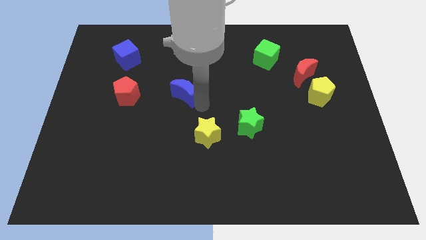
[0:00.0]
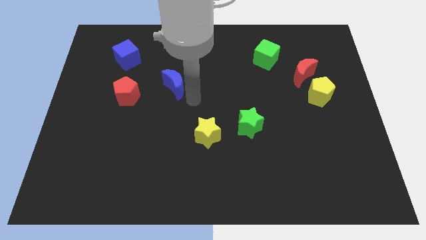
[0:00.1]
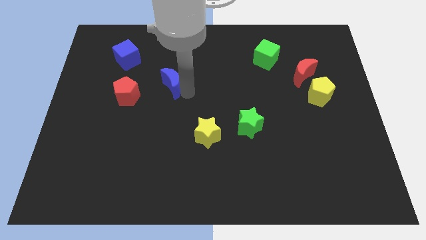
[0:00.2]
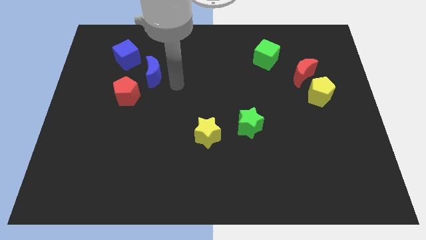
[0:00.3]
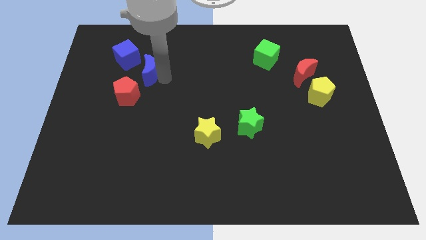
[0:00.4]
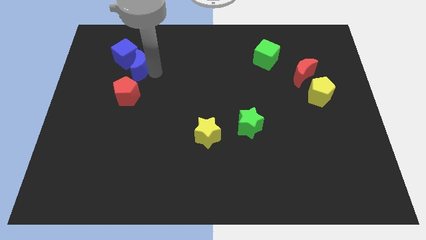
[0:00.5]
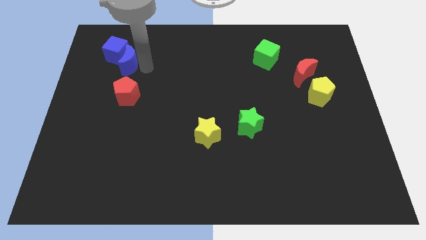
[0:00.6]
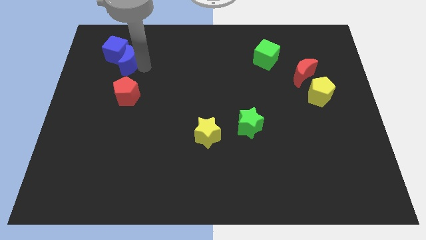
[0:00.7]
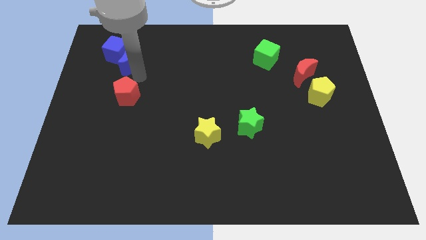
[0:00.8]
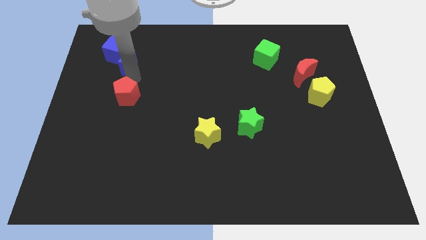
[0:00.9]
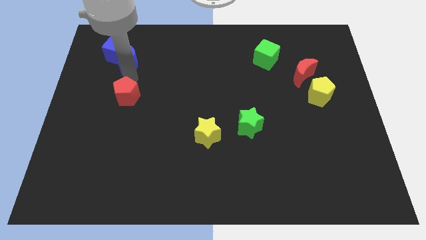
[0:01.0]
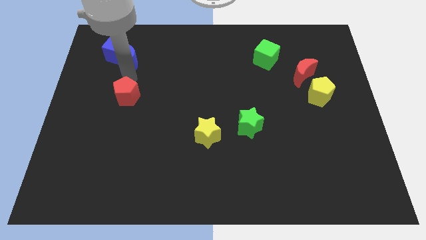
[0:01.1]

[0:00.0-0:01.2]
push the blue crescent into the blue cube

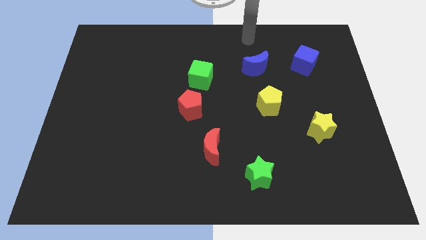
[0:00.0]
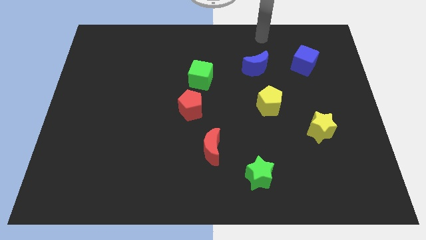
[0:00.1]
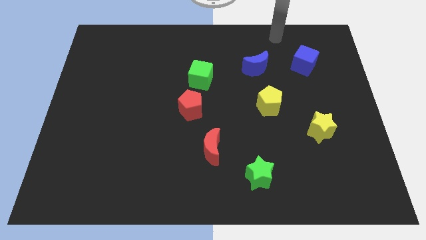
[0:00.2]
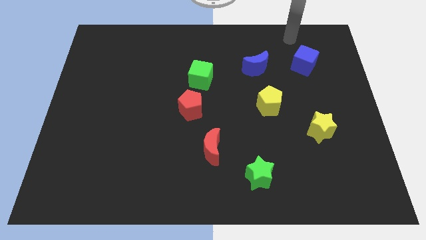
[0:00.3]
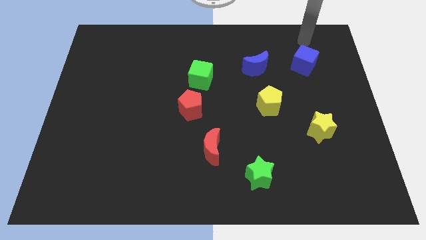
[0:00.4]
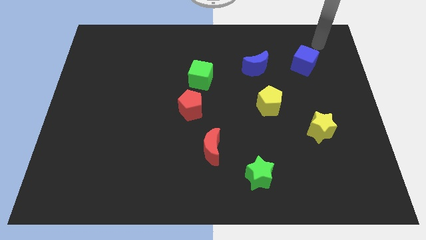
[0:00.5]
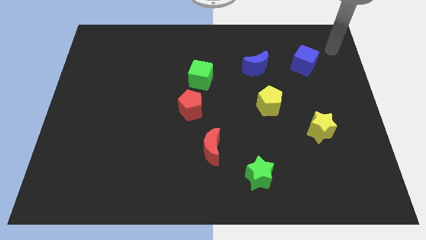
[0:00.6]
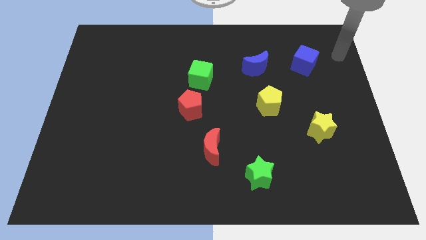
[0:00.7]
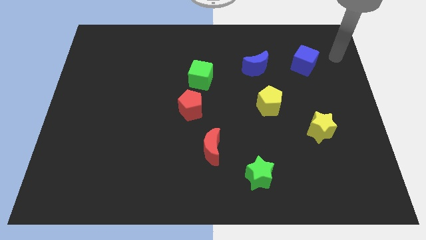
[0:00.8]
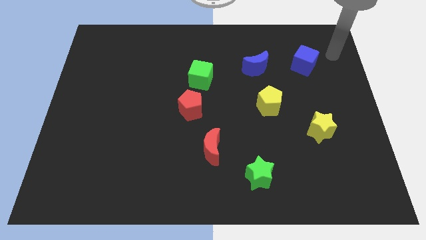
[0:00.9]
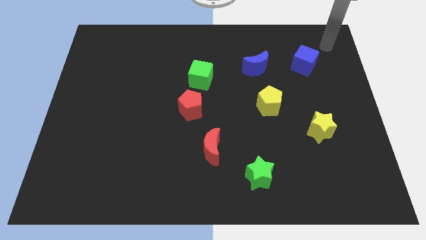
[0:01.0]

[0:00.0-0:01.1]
move the arm close to the blue cube

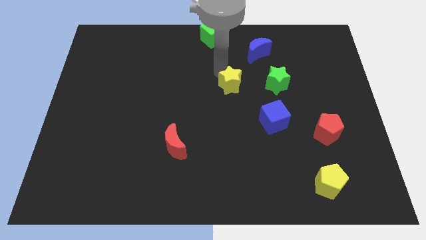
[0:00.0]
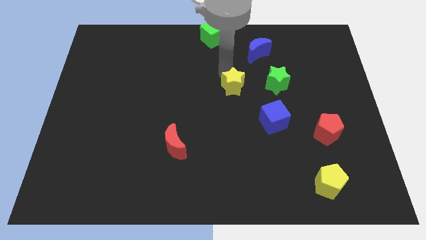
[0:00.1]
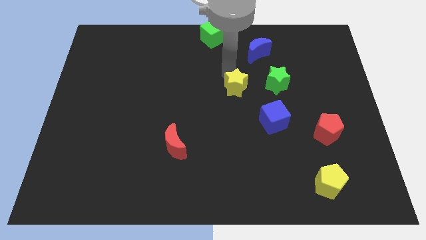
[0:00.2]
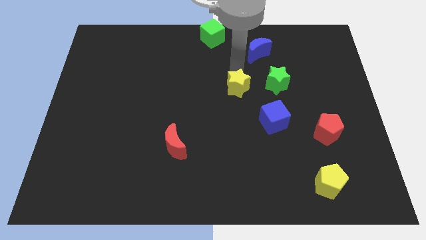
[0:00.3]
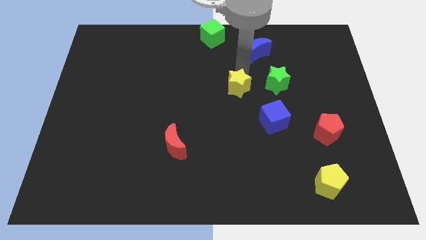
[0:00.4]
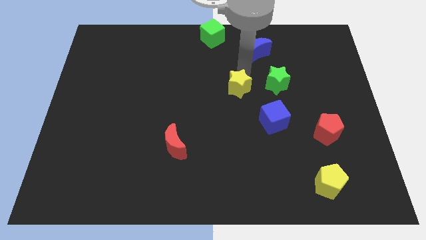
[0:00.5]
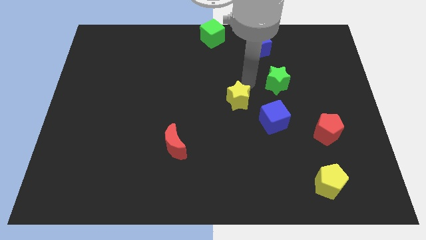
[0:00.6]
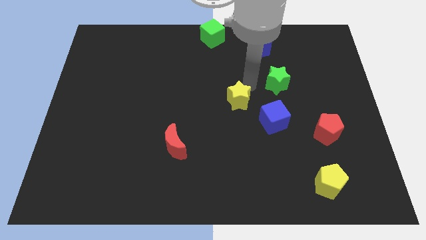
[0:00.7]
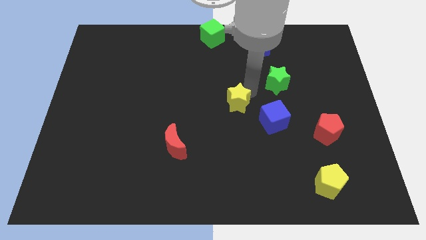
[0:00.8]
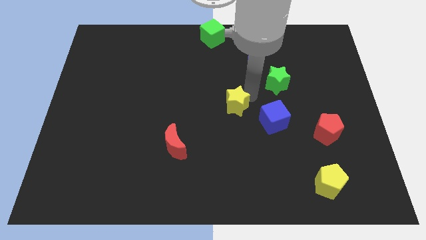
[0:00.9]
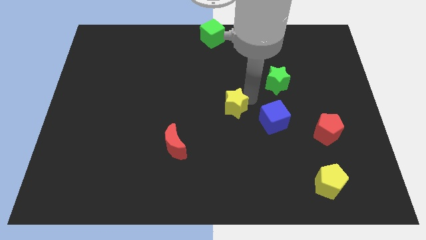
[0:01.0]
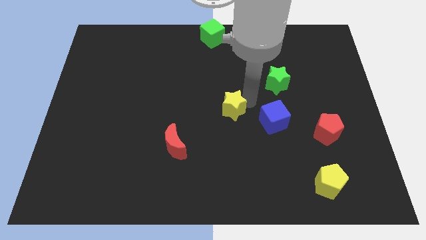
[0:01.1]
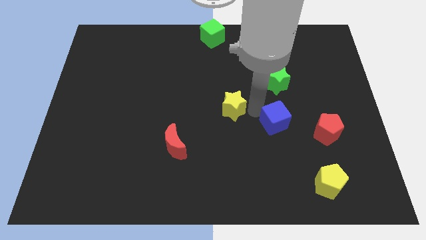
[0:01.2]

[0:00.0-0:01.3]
push the yellow star slightly downwards

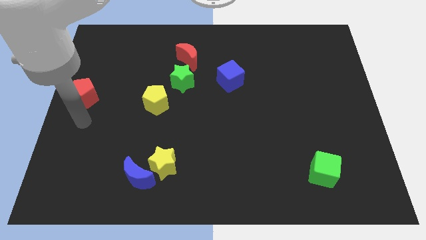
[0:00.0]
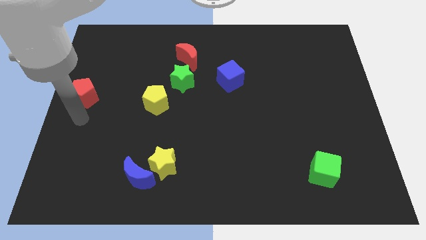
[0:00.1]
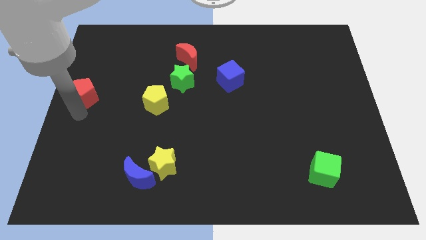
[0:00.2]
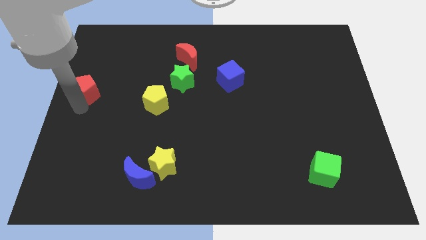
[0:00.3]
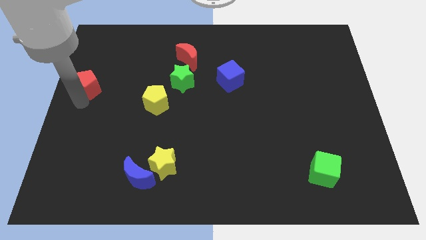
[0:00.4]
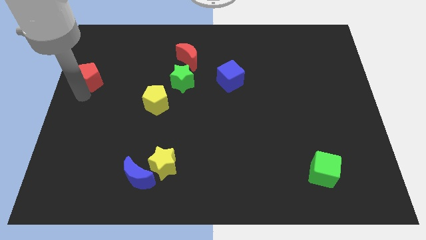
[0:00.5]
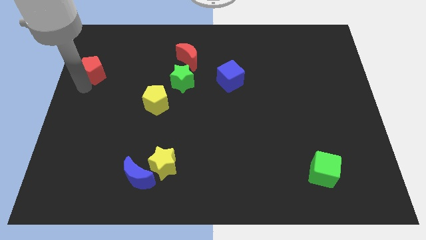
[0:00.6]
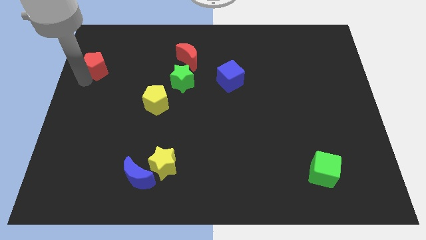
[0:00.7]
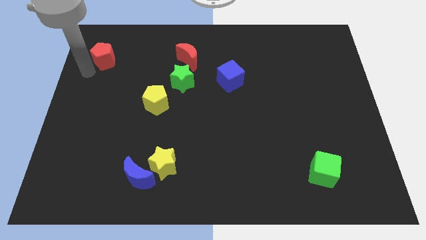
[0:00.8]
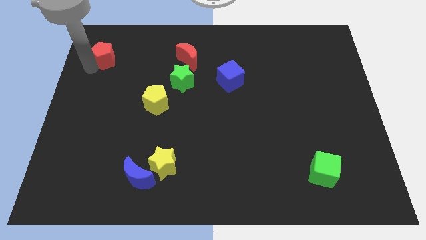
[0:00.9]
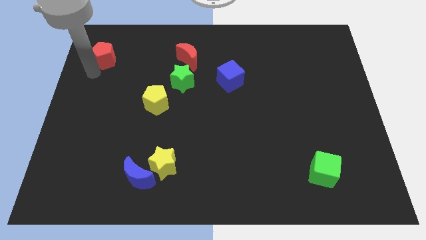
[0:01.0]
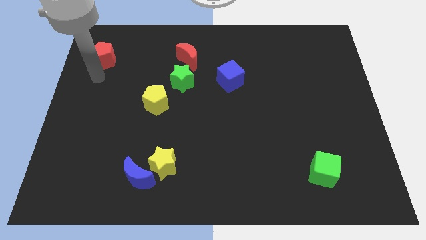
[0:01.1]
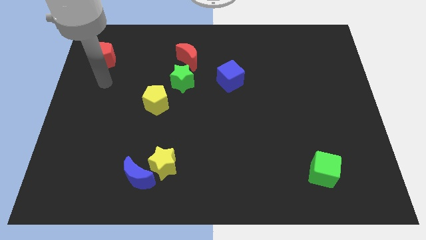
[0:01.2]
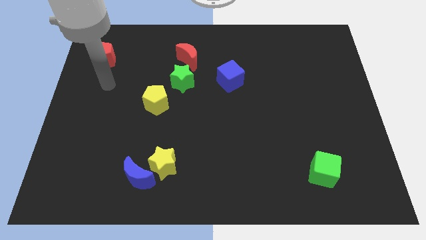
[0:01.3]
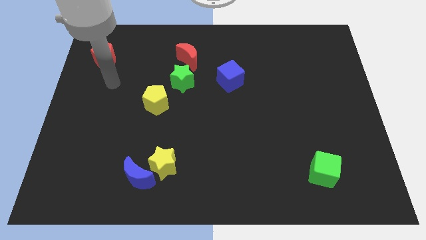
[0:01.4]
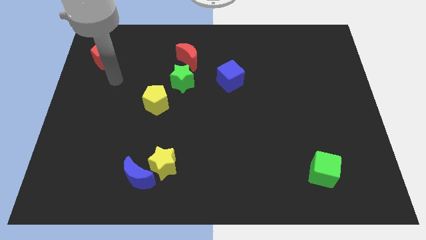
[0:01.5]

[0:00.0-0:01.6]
push the red pentagon towards the top left of the board

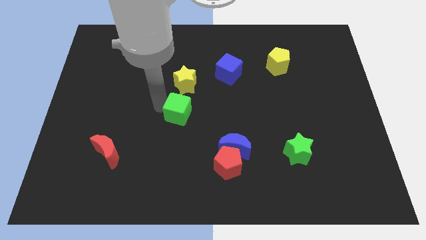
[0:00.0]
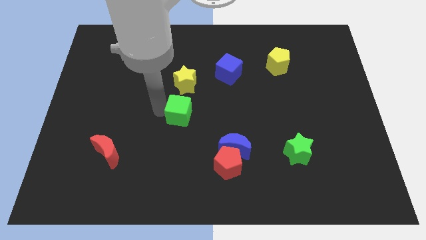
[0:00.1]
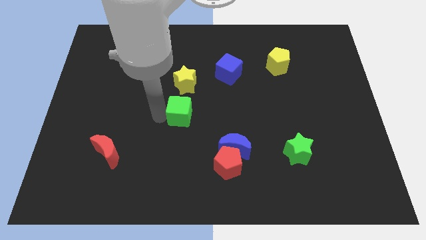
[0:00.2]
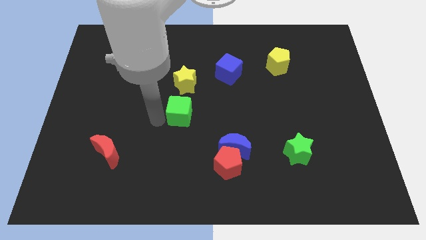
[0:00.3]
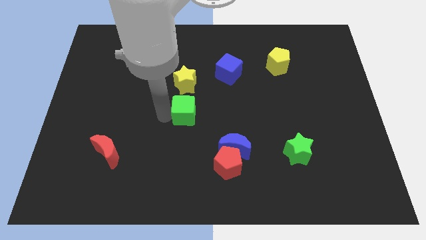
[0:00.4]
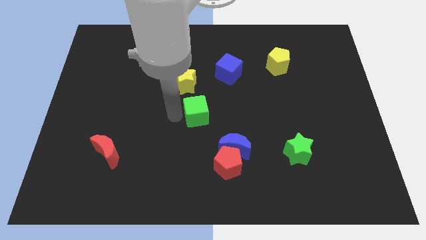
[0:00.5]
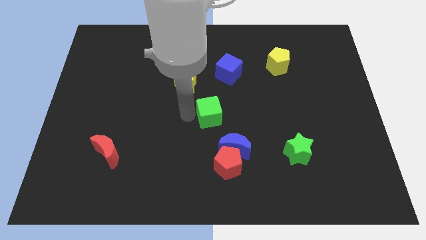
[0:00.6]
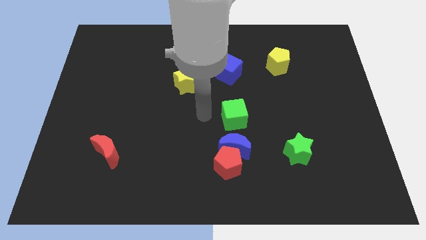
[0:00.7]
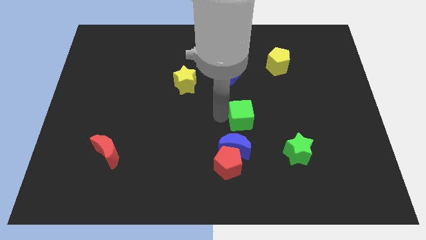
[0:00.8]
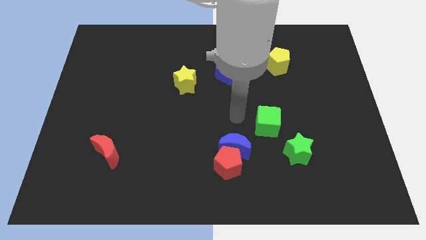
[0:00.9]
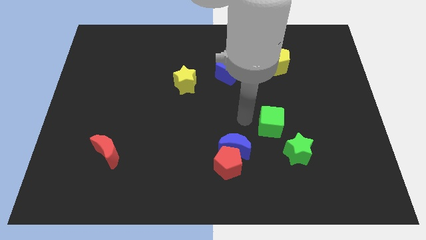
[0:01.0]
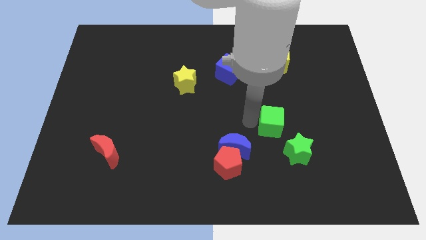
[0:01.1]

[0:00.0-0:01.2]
slide the green cube to the right

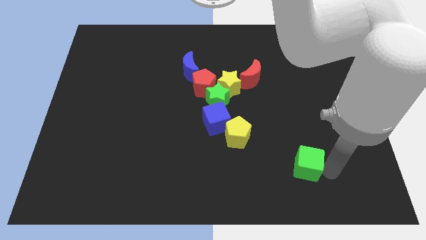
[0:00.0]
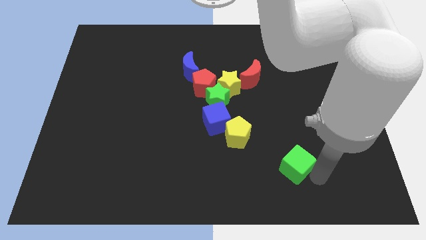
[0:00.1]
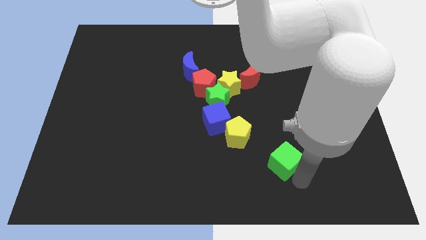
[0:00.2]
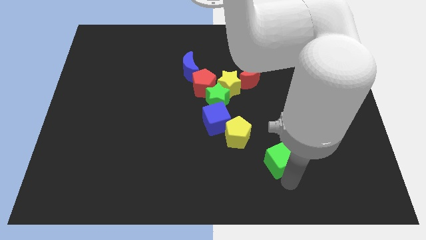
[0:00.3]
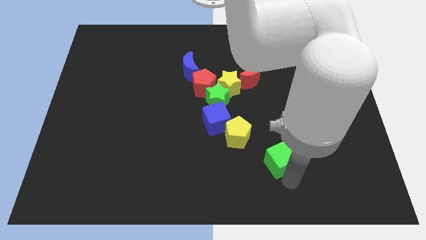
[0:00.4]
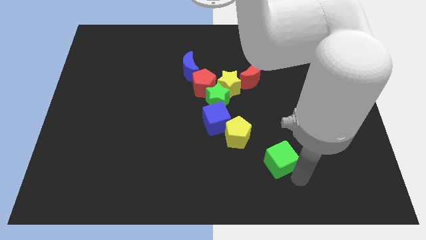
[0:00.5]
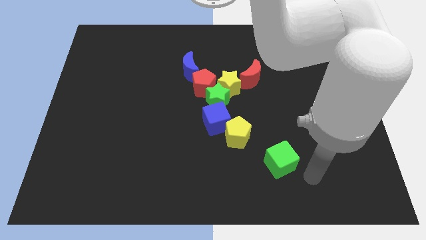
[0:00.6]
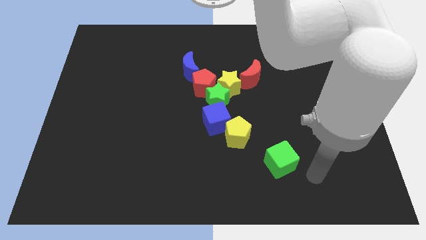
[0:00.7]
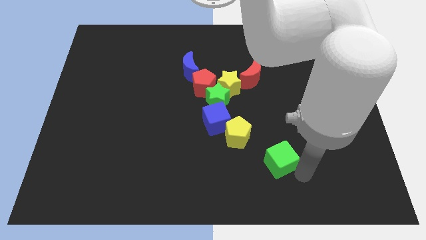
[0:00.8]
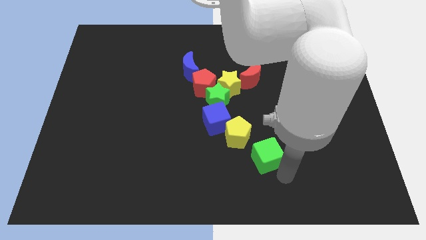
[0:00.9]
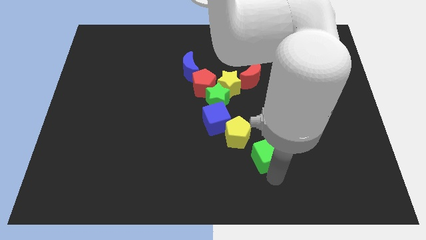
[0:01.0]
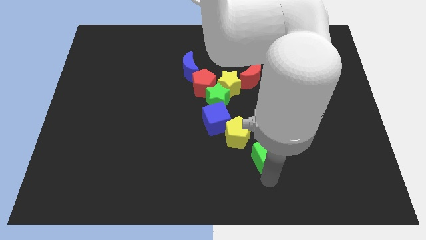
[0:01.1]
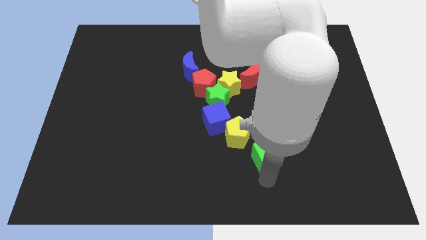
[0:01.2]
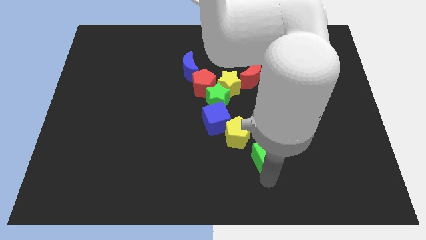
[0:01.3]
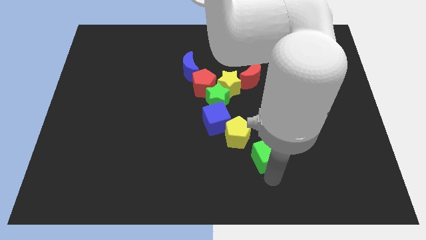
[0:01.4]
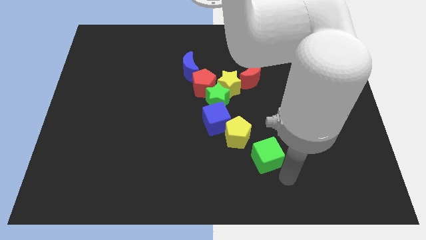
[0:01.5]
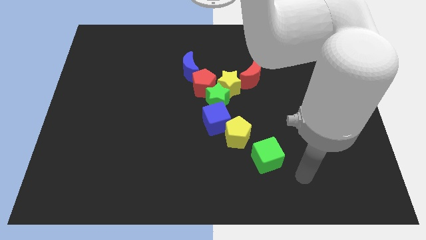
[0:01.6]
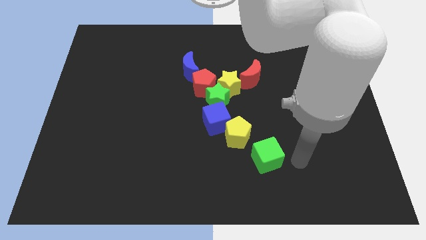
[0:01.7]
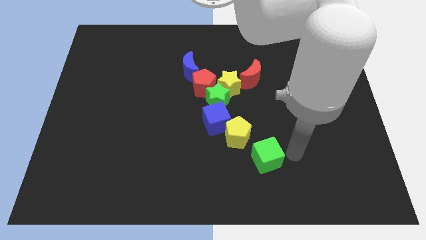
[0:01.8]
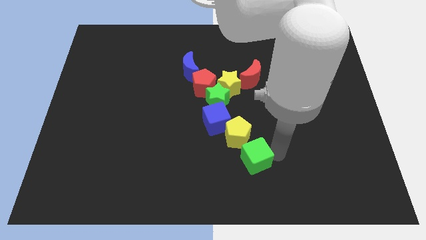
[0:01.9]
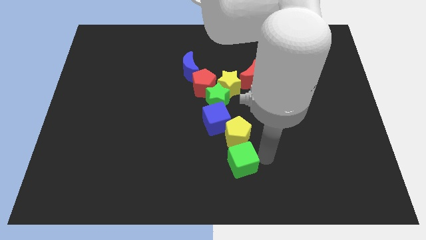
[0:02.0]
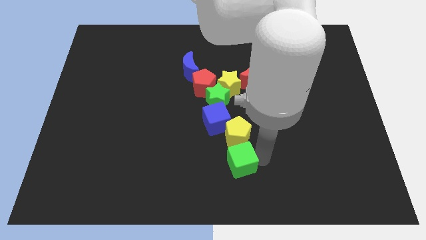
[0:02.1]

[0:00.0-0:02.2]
push the green cube to the bottom of the yellow pentagon

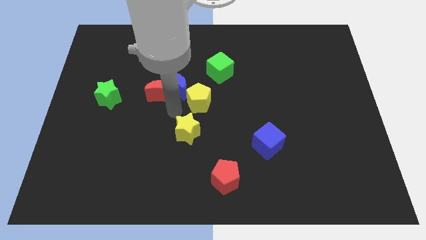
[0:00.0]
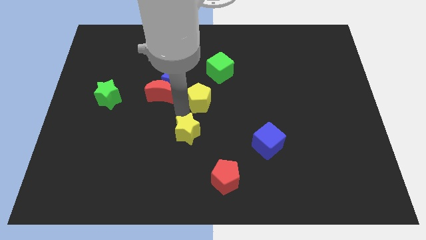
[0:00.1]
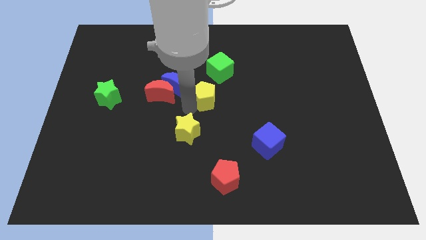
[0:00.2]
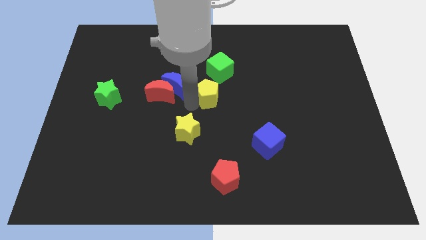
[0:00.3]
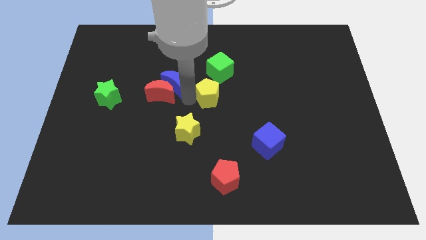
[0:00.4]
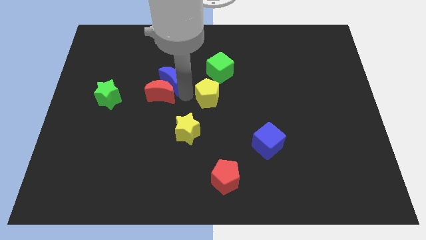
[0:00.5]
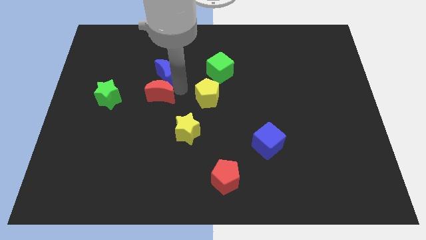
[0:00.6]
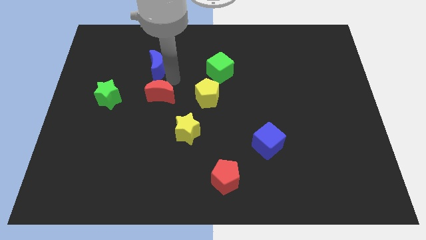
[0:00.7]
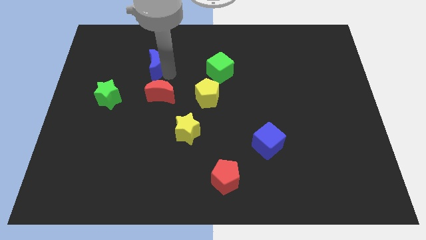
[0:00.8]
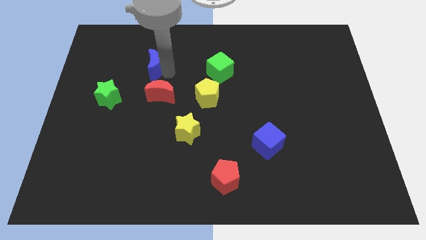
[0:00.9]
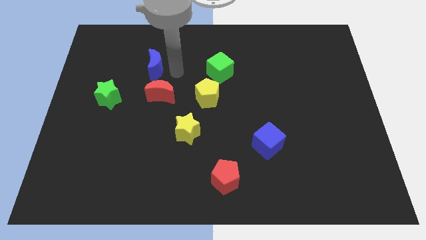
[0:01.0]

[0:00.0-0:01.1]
separate blue moon from red moon
